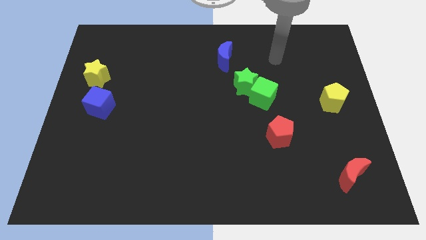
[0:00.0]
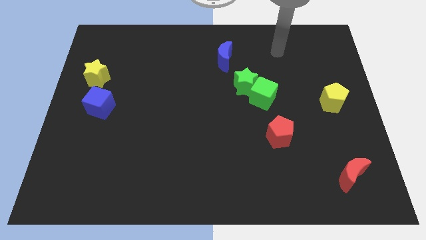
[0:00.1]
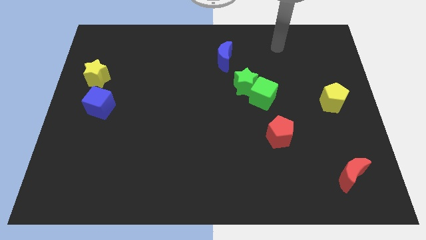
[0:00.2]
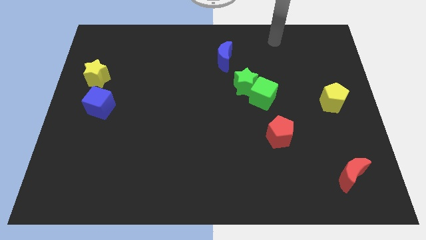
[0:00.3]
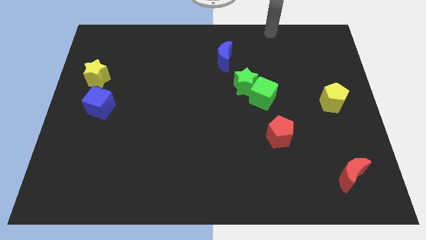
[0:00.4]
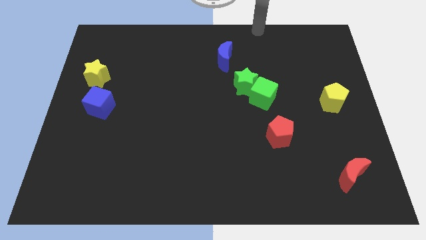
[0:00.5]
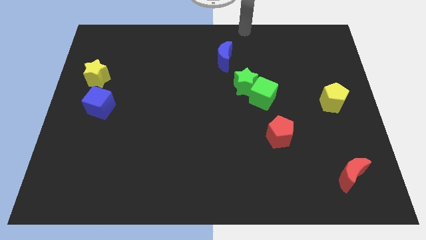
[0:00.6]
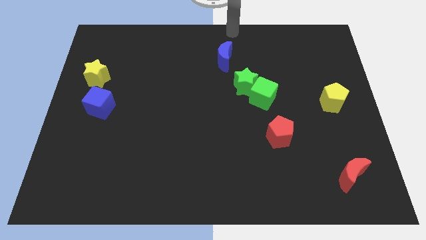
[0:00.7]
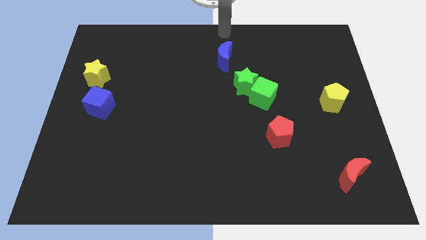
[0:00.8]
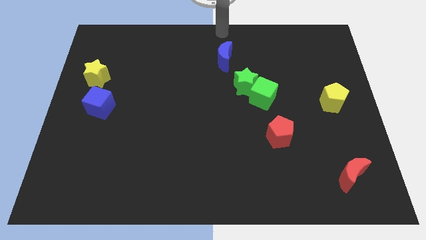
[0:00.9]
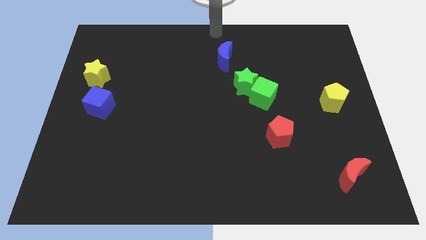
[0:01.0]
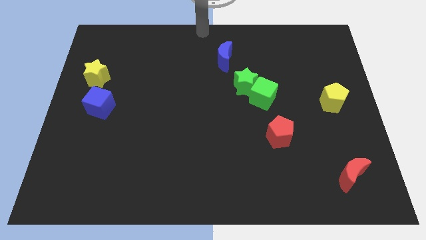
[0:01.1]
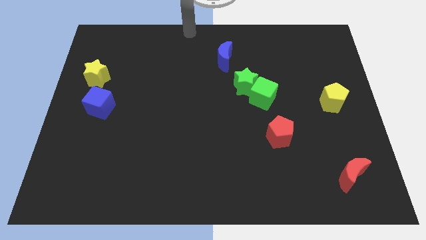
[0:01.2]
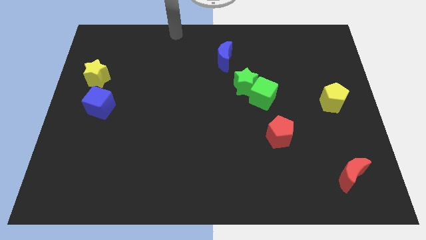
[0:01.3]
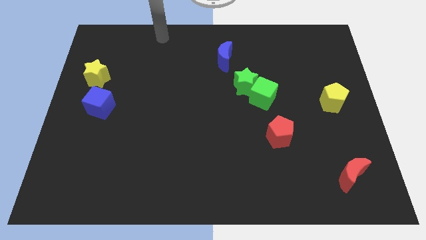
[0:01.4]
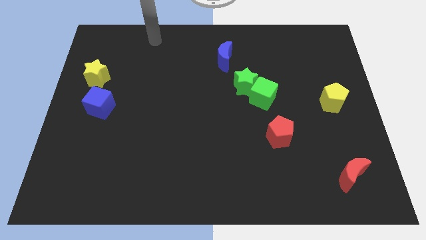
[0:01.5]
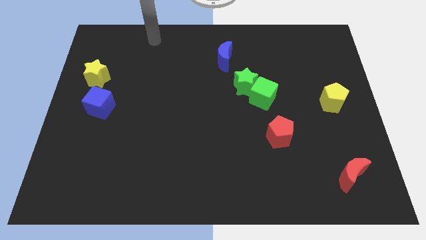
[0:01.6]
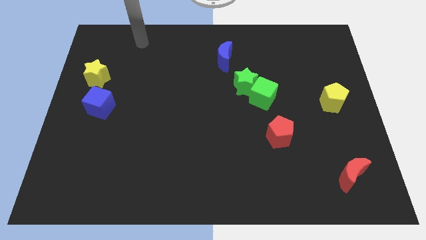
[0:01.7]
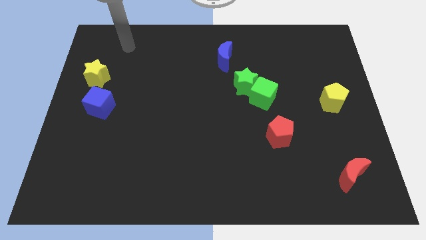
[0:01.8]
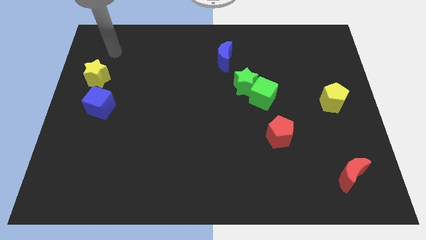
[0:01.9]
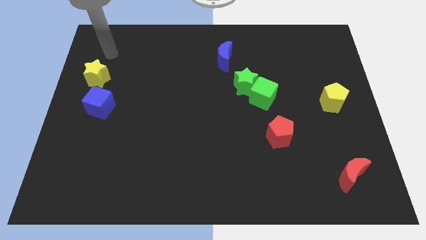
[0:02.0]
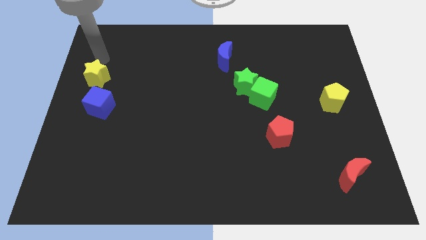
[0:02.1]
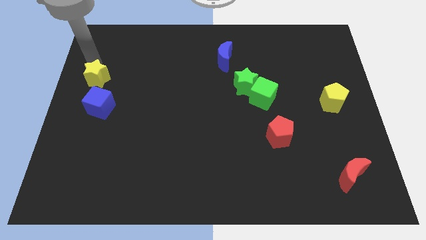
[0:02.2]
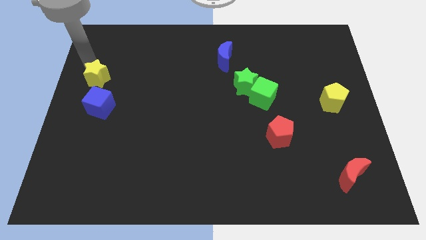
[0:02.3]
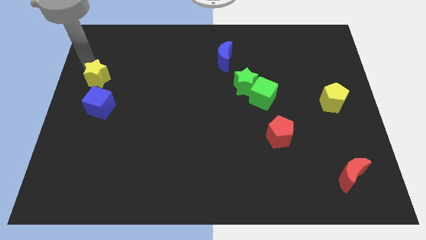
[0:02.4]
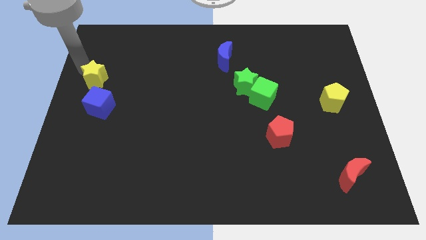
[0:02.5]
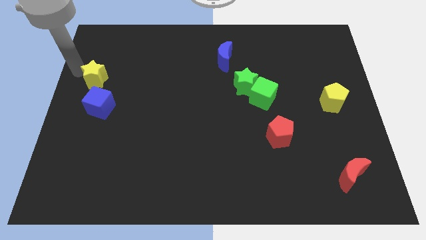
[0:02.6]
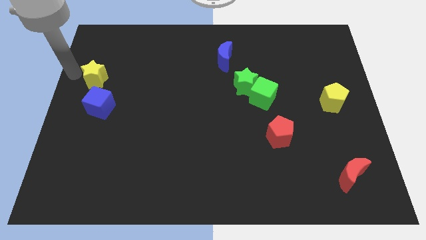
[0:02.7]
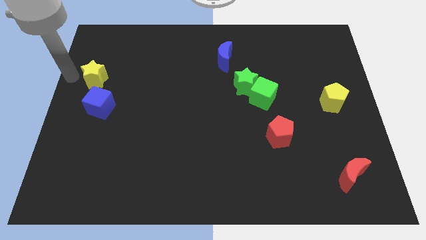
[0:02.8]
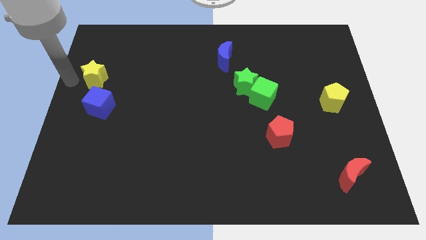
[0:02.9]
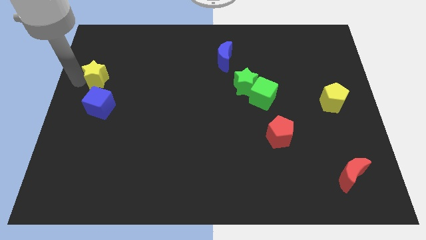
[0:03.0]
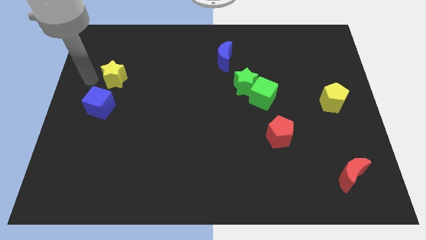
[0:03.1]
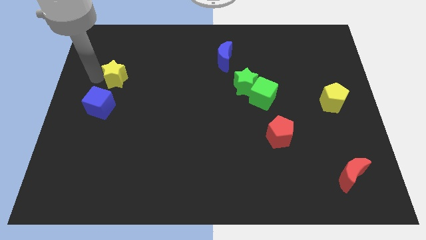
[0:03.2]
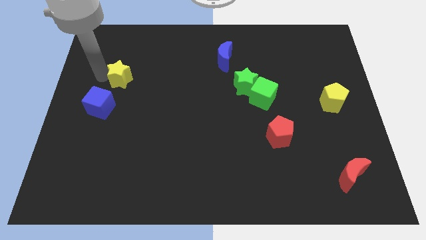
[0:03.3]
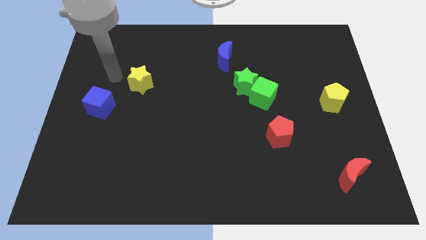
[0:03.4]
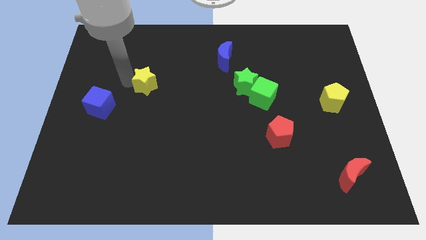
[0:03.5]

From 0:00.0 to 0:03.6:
move the yellow star to the right of the board

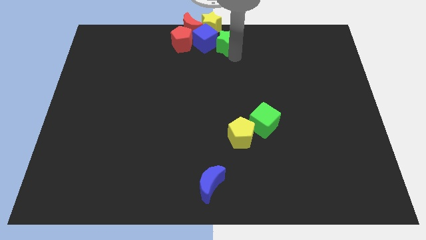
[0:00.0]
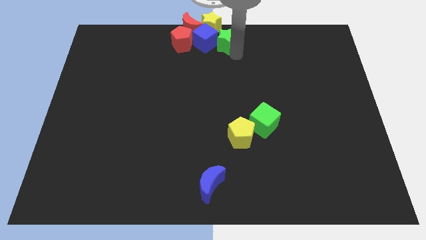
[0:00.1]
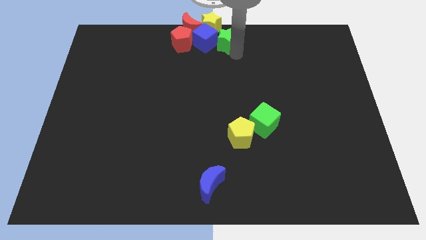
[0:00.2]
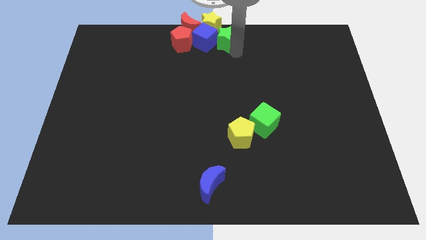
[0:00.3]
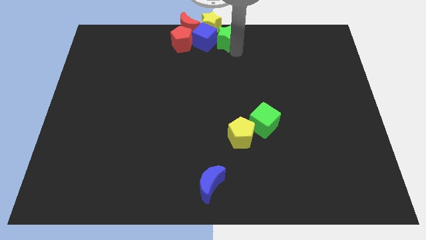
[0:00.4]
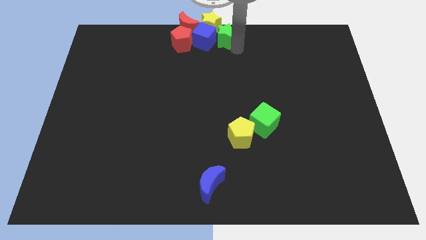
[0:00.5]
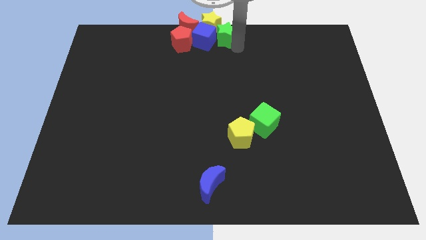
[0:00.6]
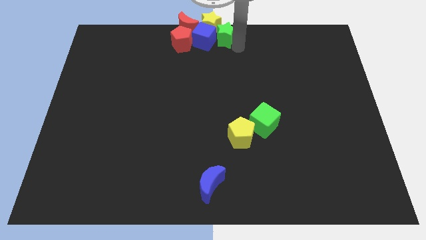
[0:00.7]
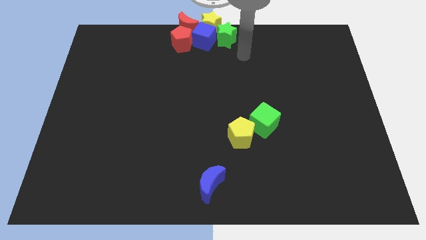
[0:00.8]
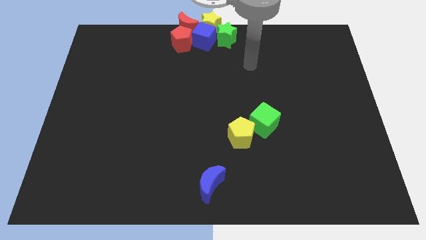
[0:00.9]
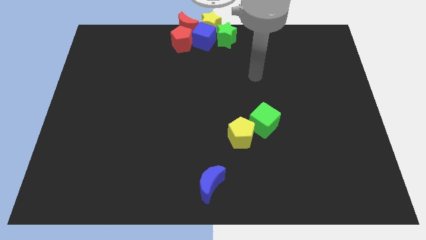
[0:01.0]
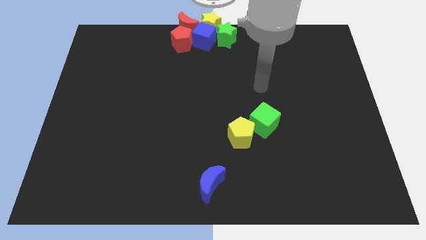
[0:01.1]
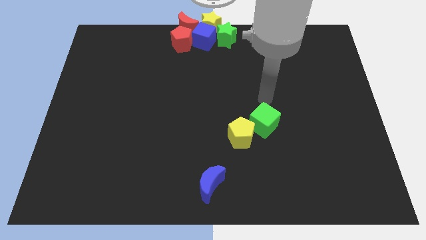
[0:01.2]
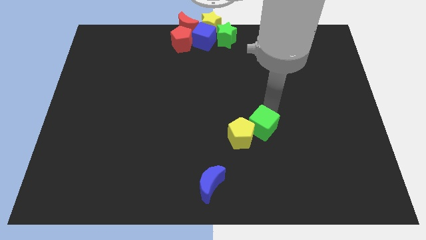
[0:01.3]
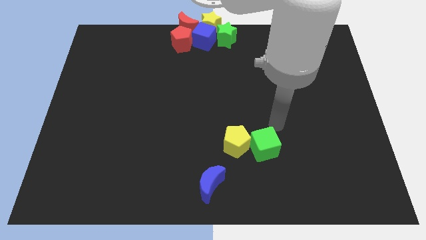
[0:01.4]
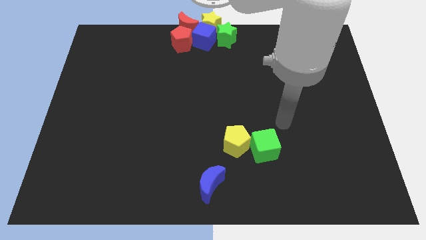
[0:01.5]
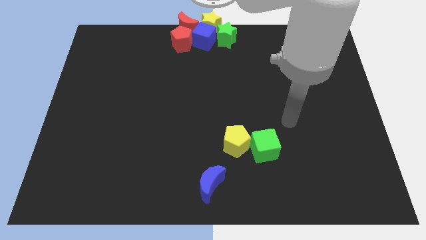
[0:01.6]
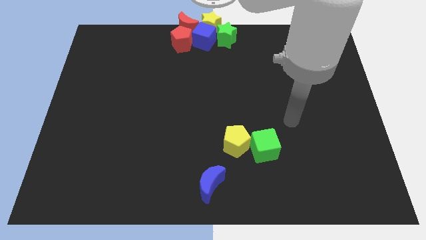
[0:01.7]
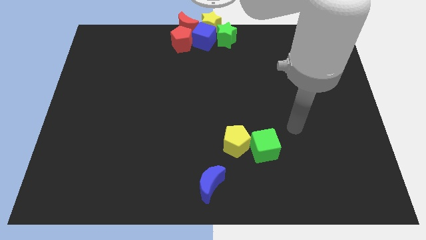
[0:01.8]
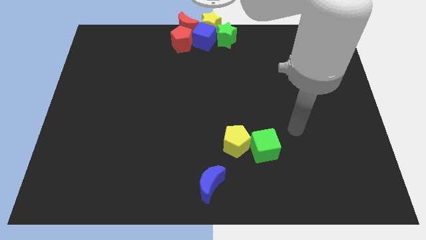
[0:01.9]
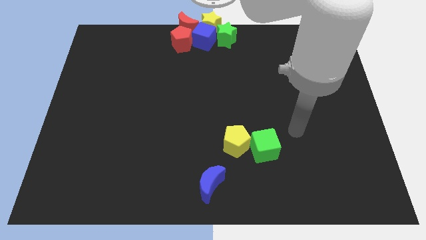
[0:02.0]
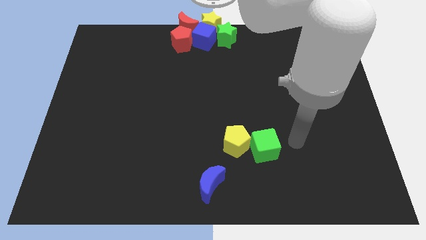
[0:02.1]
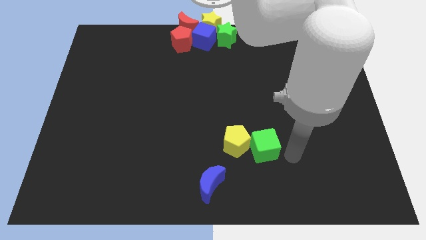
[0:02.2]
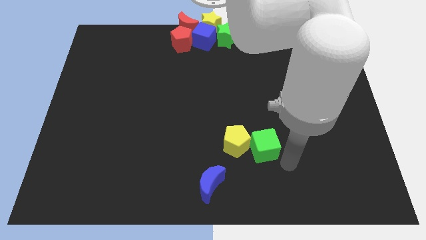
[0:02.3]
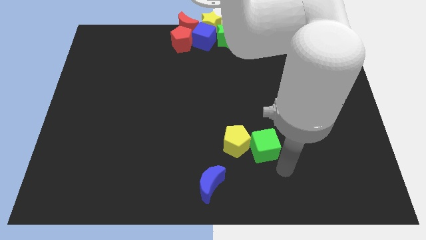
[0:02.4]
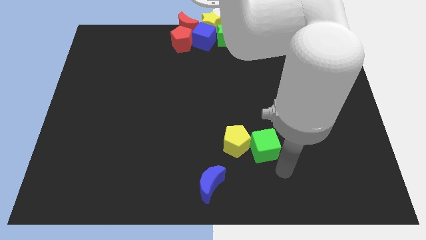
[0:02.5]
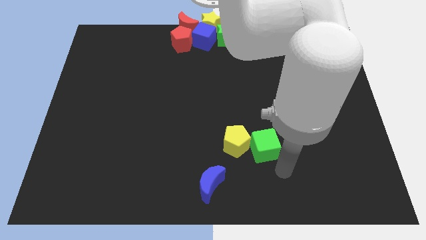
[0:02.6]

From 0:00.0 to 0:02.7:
place the green cube right to the yellow pentagon

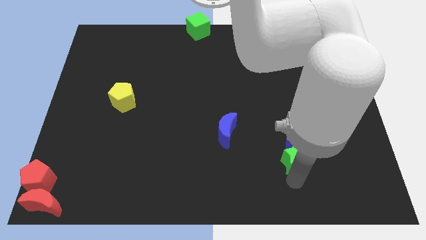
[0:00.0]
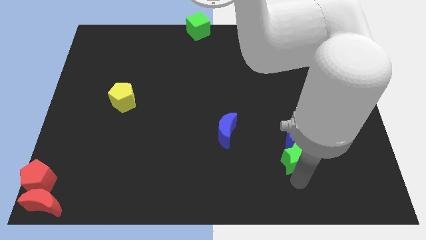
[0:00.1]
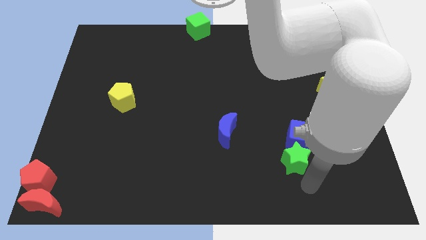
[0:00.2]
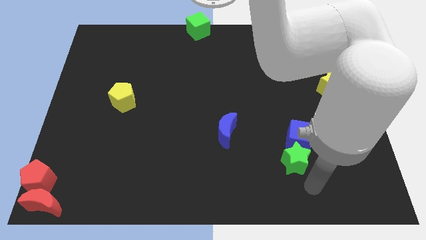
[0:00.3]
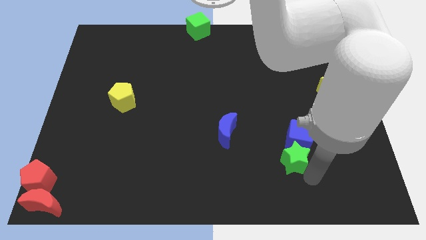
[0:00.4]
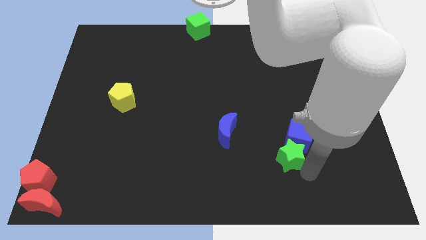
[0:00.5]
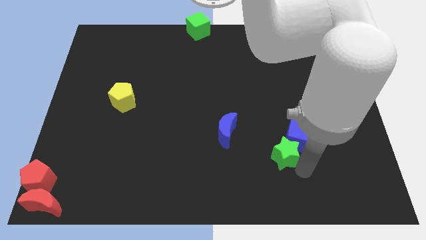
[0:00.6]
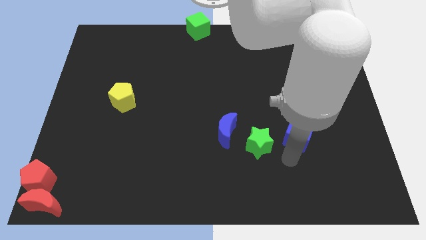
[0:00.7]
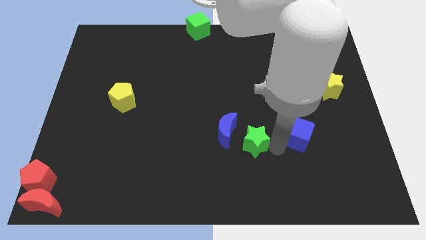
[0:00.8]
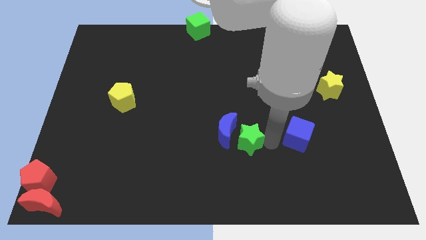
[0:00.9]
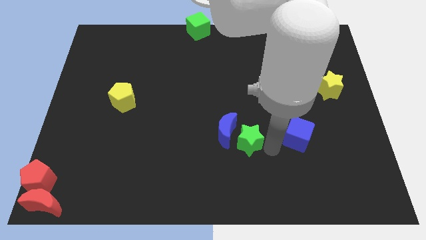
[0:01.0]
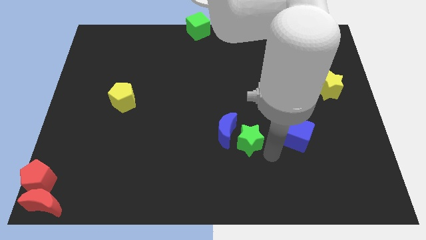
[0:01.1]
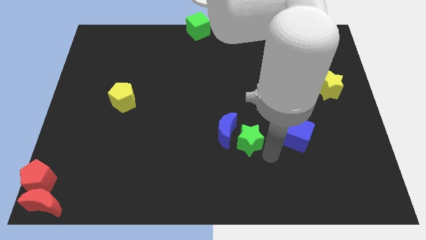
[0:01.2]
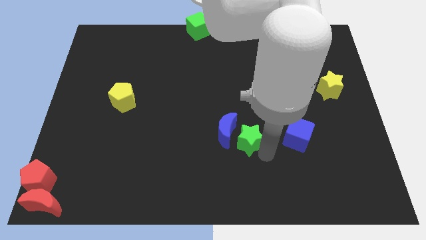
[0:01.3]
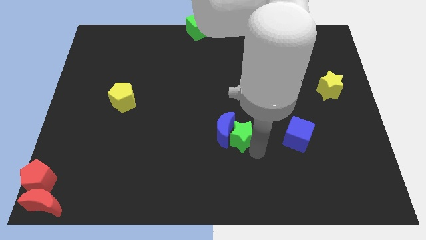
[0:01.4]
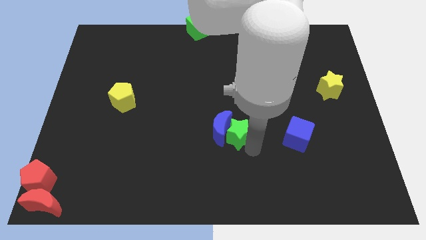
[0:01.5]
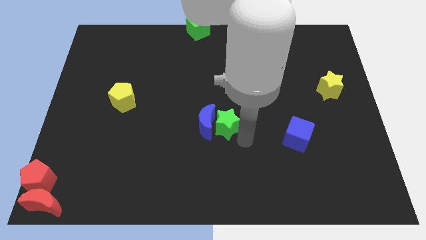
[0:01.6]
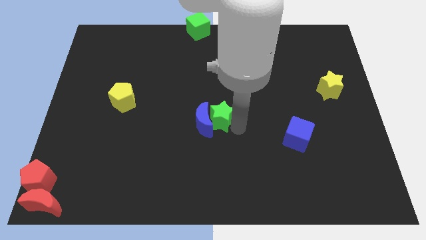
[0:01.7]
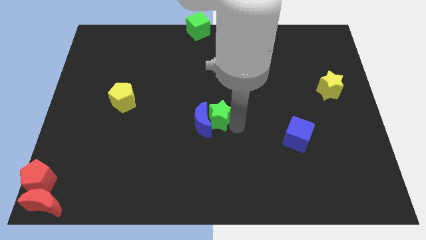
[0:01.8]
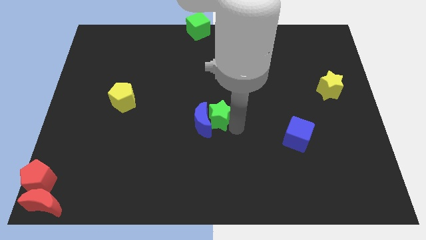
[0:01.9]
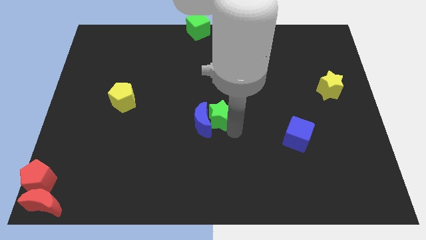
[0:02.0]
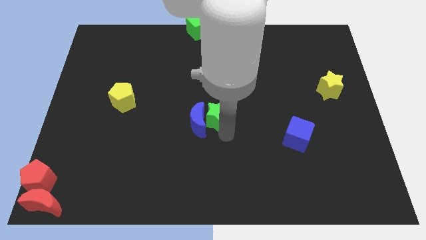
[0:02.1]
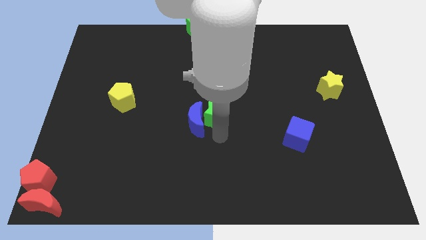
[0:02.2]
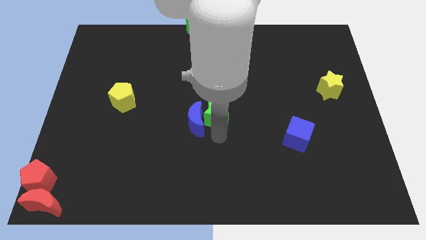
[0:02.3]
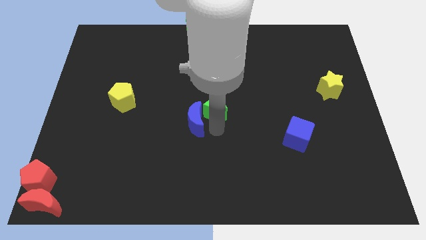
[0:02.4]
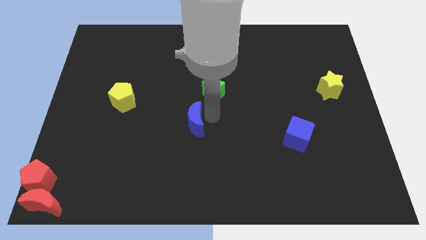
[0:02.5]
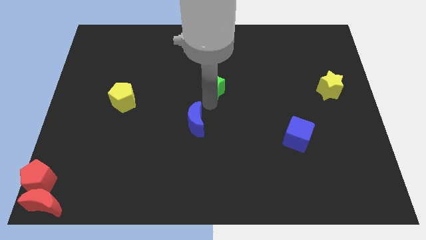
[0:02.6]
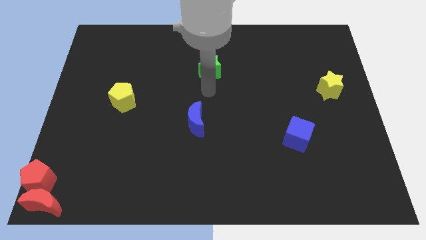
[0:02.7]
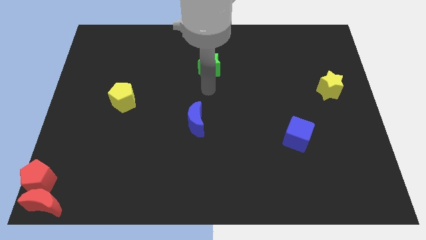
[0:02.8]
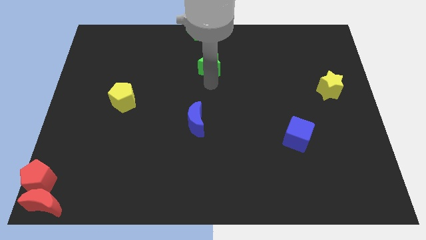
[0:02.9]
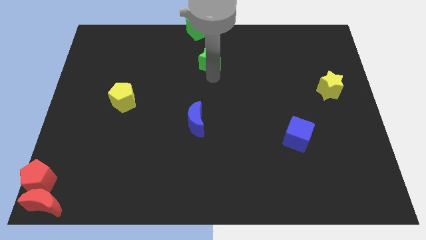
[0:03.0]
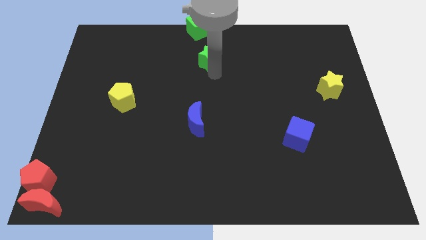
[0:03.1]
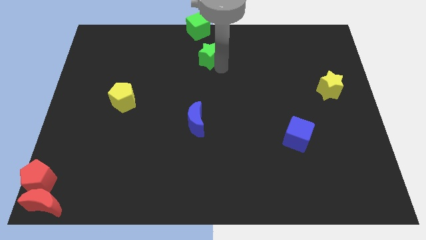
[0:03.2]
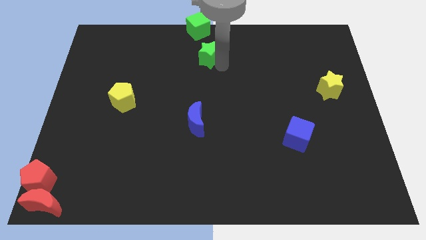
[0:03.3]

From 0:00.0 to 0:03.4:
move the green star diagonally top left to the blue cube
